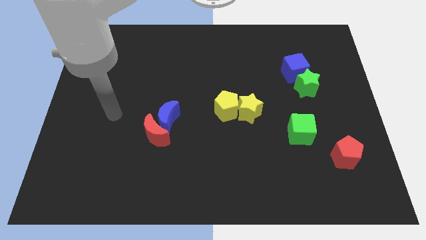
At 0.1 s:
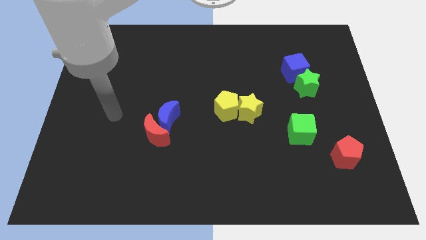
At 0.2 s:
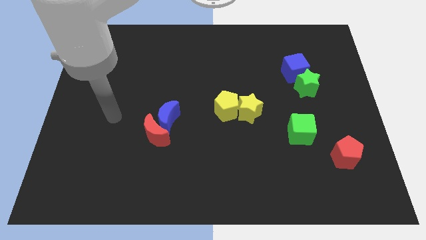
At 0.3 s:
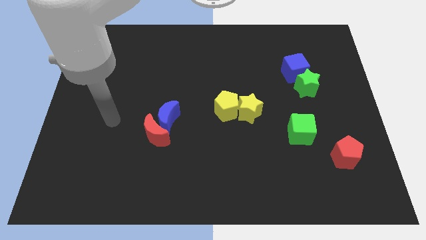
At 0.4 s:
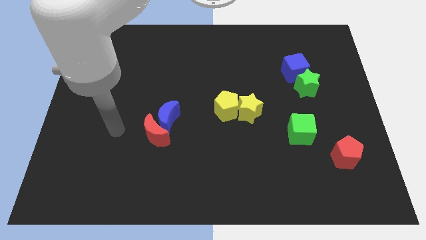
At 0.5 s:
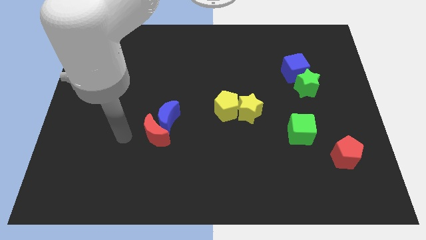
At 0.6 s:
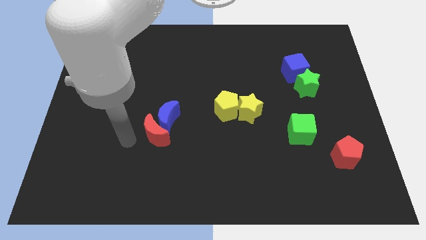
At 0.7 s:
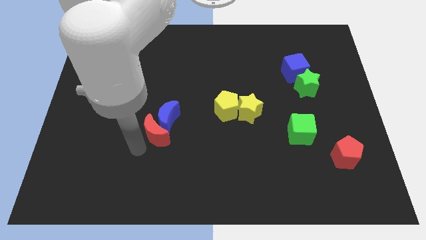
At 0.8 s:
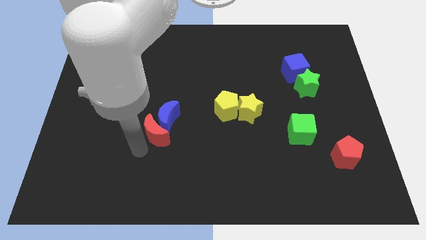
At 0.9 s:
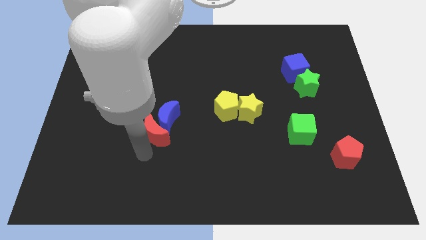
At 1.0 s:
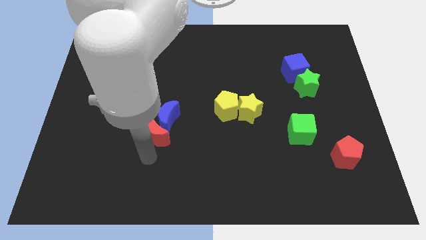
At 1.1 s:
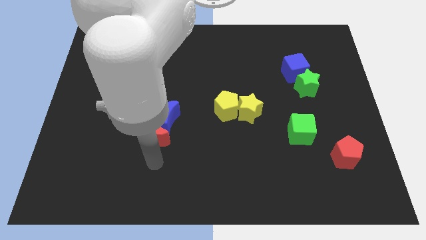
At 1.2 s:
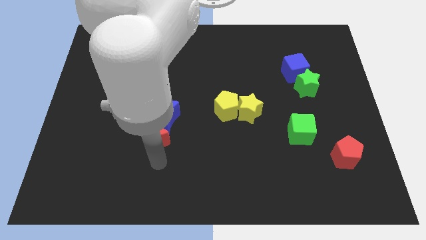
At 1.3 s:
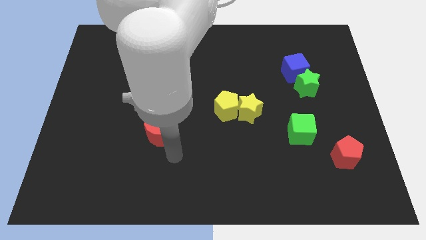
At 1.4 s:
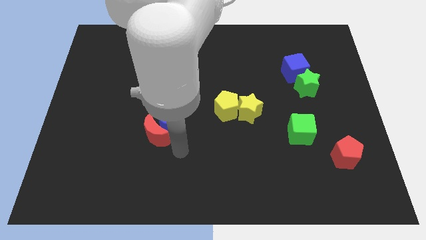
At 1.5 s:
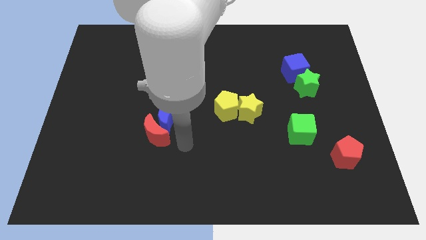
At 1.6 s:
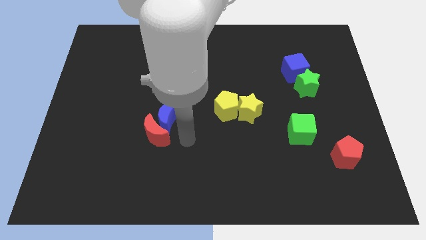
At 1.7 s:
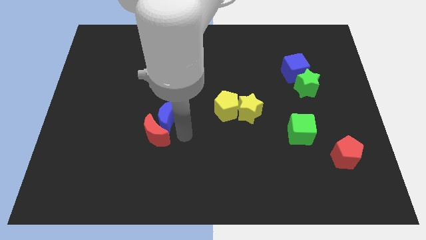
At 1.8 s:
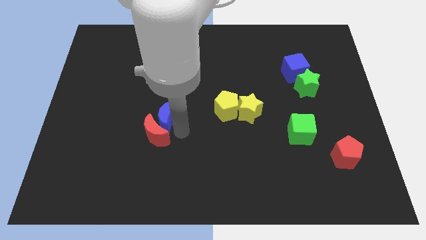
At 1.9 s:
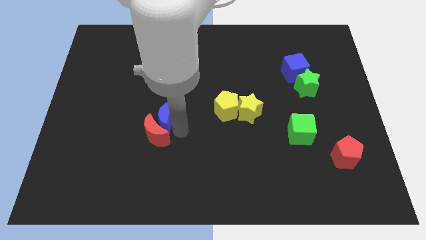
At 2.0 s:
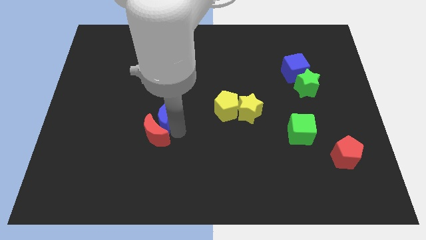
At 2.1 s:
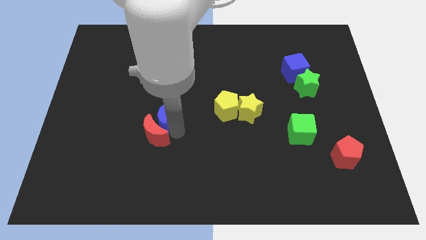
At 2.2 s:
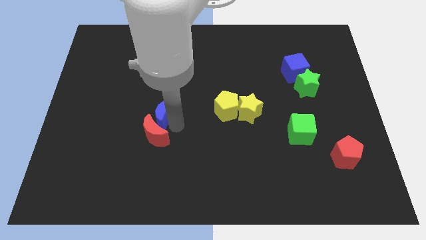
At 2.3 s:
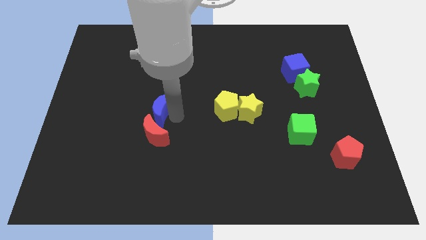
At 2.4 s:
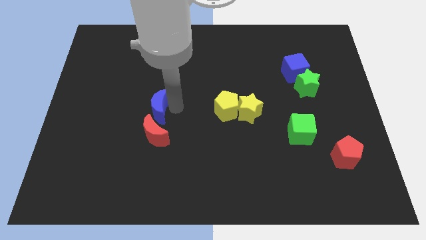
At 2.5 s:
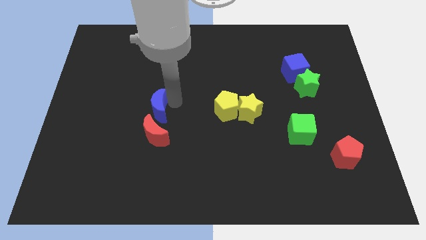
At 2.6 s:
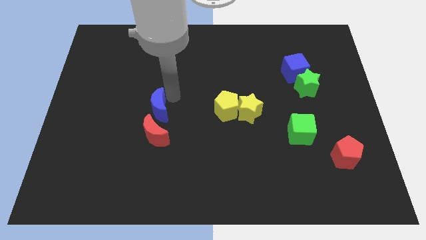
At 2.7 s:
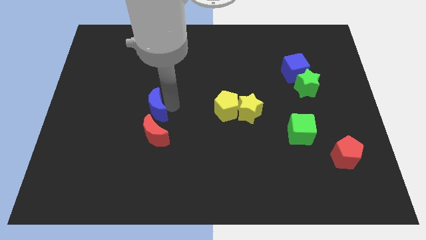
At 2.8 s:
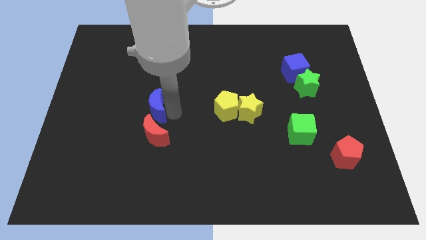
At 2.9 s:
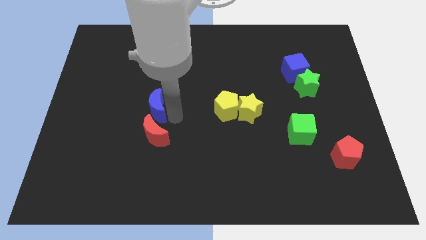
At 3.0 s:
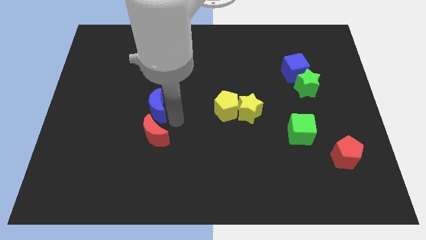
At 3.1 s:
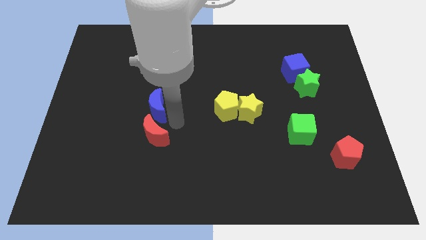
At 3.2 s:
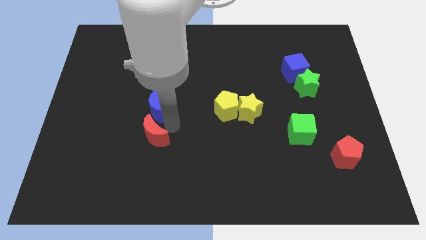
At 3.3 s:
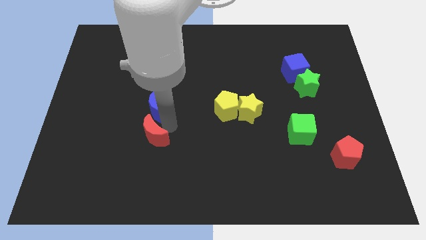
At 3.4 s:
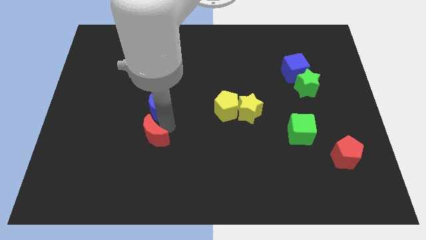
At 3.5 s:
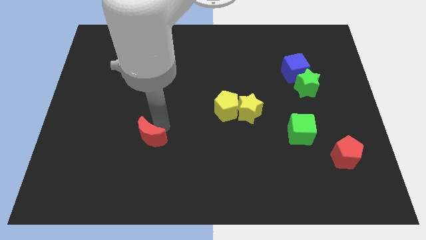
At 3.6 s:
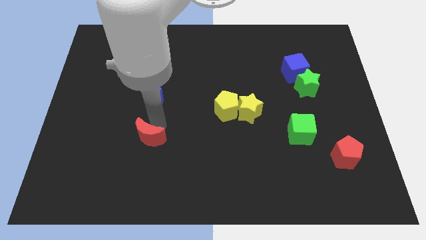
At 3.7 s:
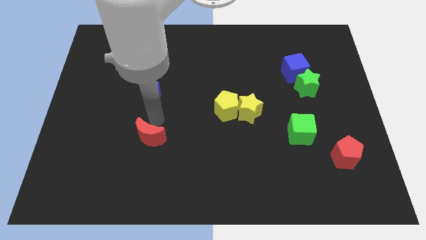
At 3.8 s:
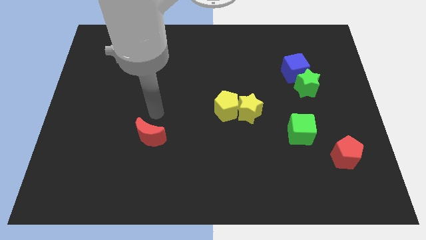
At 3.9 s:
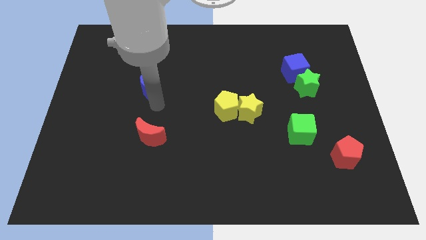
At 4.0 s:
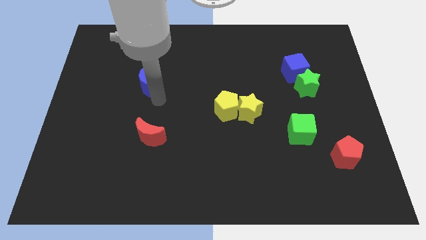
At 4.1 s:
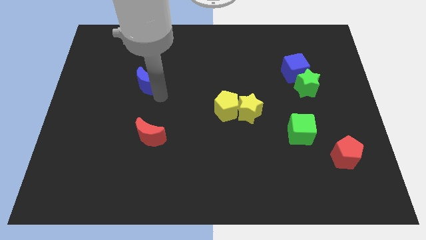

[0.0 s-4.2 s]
separate the blue crescent from the red crescent

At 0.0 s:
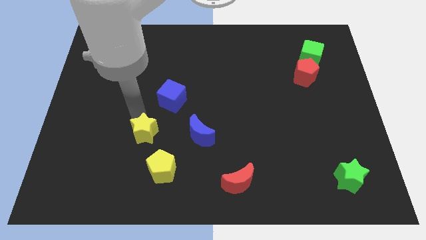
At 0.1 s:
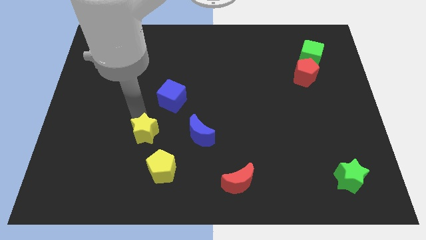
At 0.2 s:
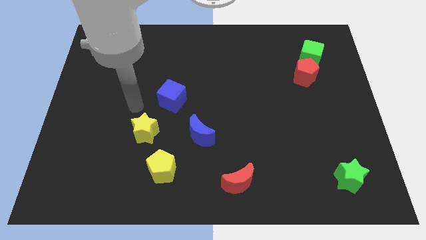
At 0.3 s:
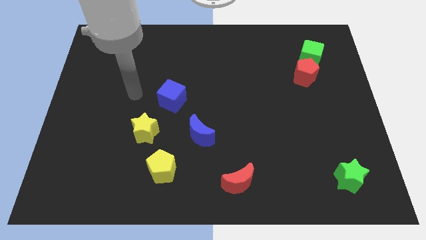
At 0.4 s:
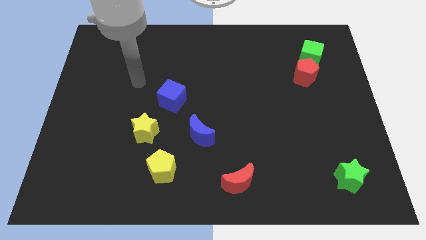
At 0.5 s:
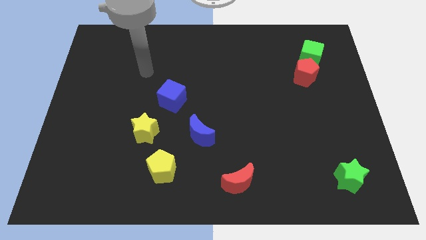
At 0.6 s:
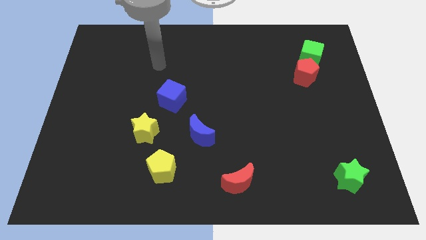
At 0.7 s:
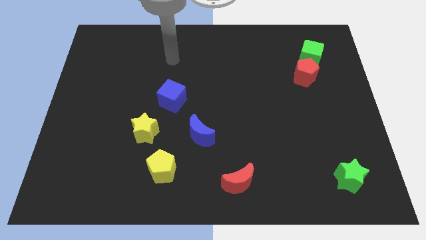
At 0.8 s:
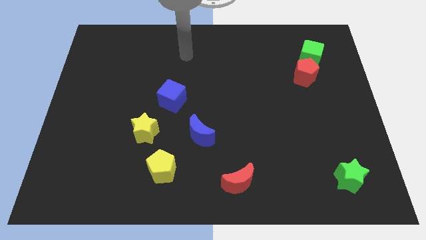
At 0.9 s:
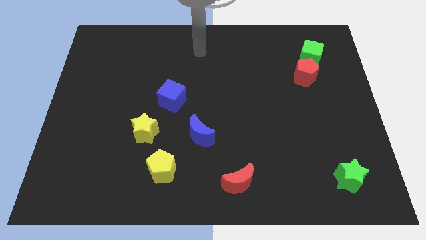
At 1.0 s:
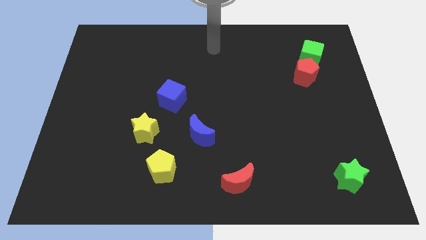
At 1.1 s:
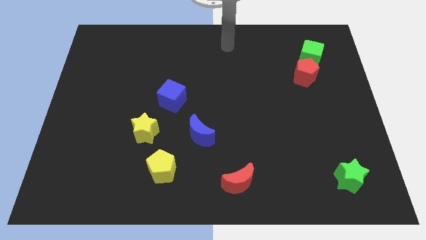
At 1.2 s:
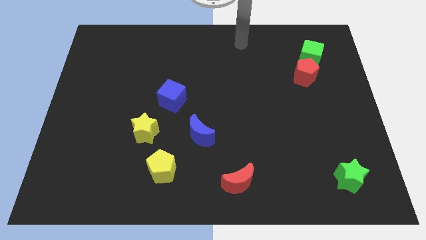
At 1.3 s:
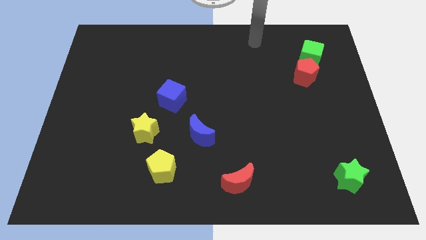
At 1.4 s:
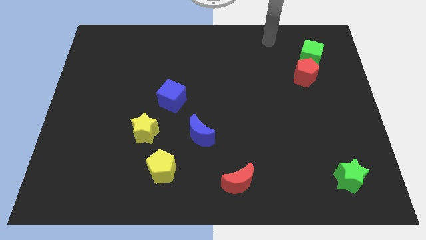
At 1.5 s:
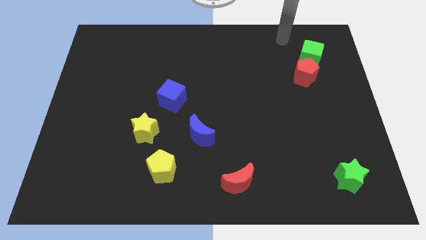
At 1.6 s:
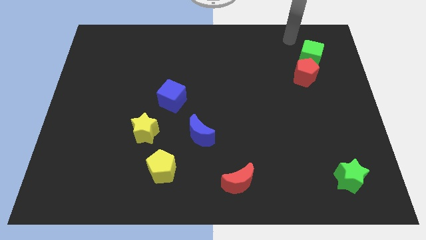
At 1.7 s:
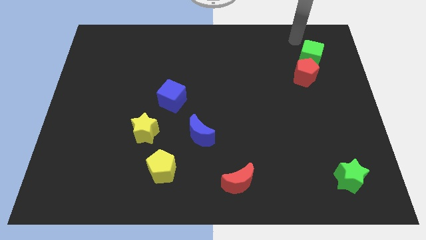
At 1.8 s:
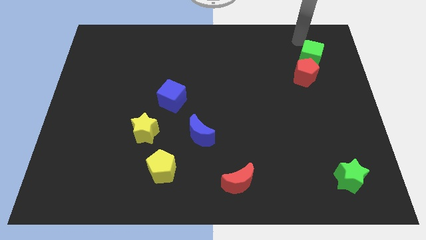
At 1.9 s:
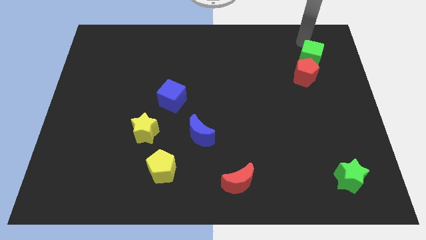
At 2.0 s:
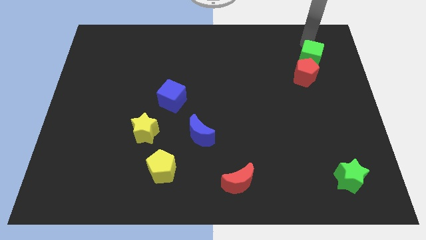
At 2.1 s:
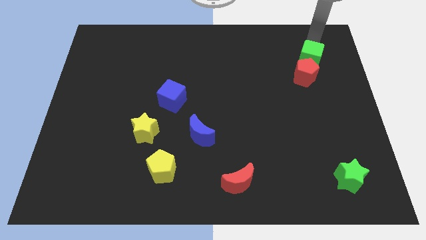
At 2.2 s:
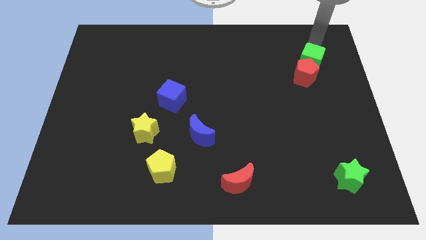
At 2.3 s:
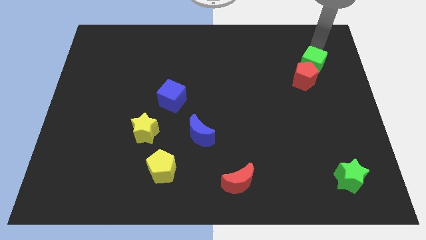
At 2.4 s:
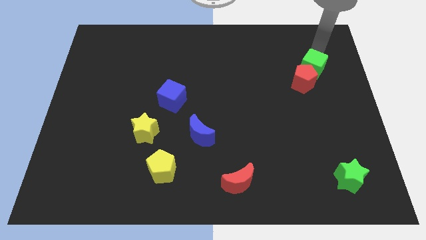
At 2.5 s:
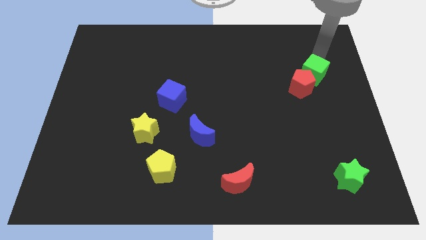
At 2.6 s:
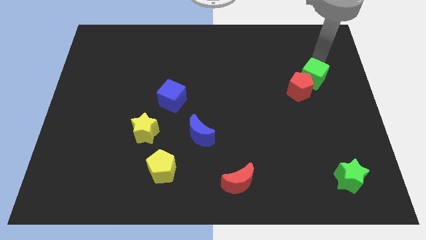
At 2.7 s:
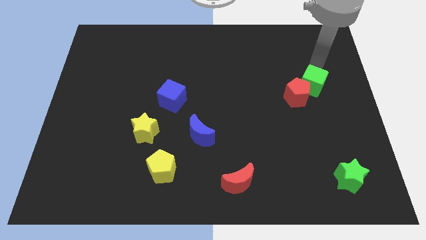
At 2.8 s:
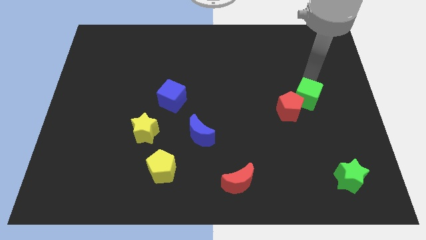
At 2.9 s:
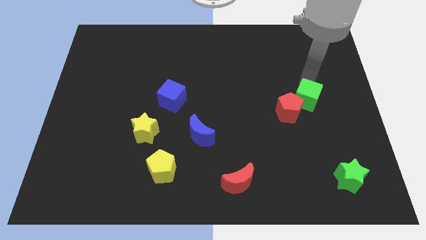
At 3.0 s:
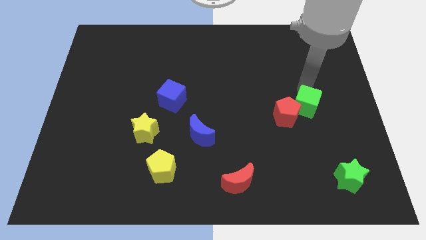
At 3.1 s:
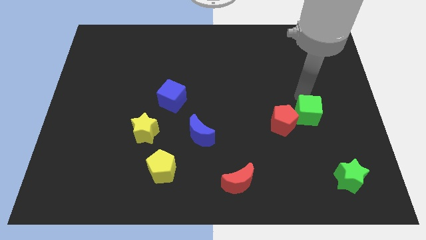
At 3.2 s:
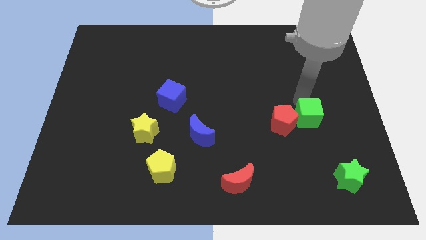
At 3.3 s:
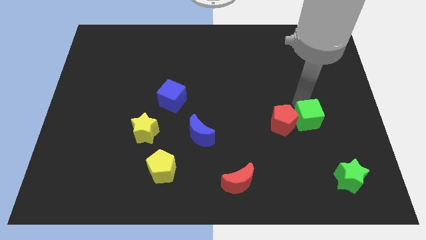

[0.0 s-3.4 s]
push green cube in to red pentagon

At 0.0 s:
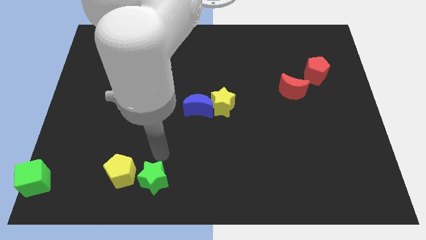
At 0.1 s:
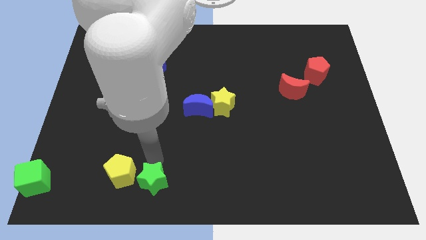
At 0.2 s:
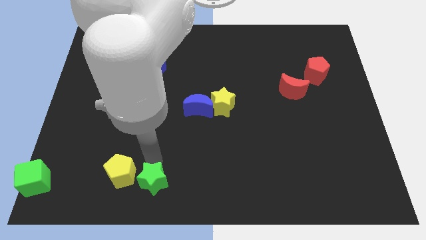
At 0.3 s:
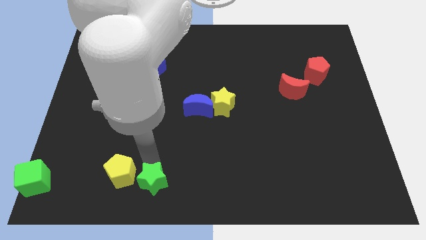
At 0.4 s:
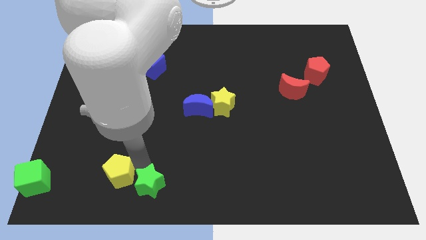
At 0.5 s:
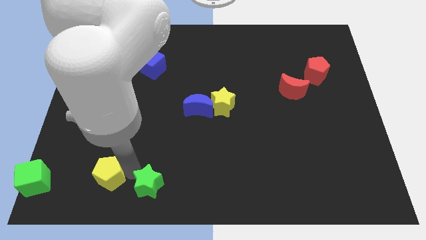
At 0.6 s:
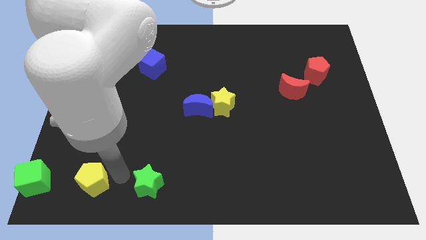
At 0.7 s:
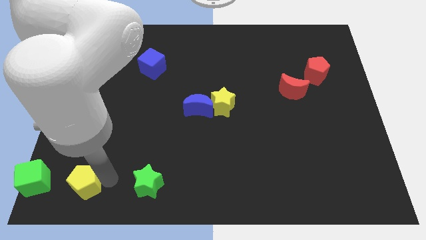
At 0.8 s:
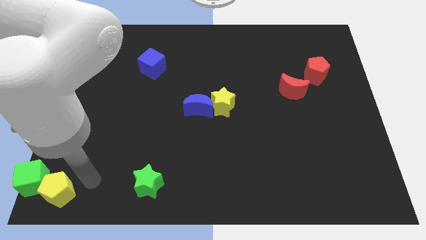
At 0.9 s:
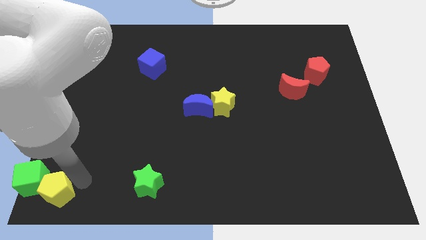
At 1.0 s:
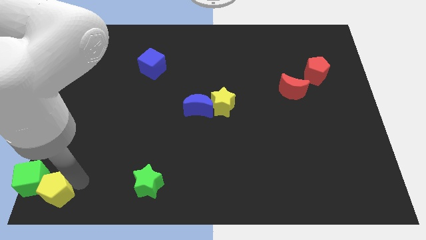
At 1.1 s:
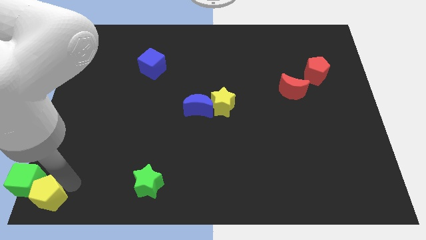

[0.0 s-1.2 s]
place yellow pentagon to the right side of the green cube

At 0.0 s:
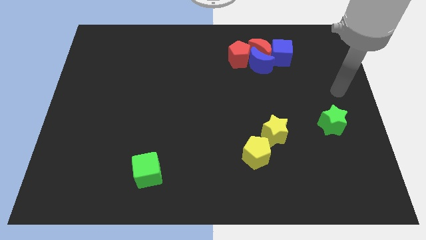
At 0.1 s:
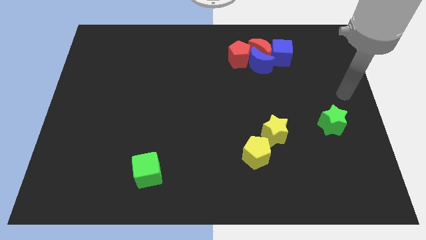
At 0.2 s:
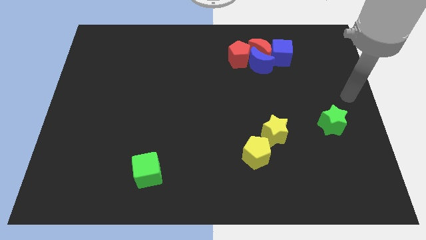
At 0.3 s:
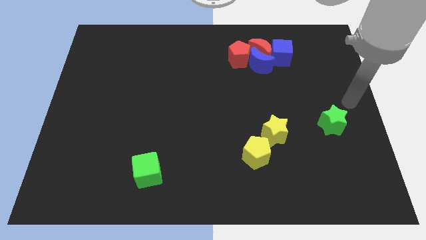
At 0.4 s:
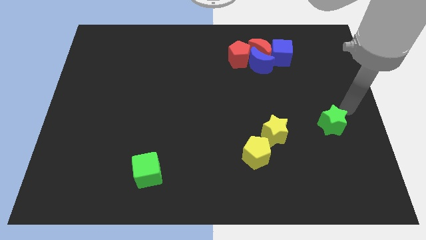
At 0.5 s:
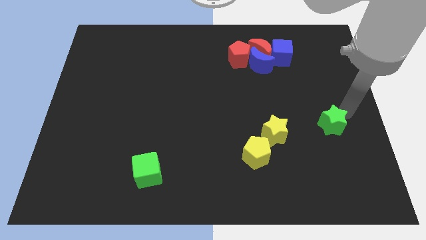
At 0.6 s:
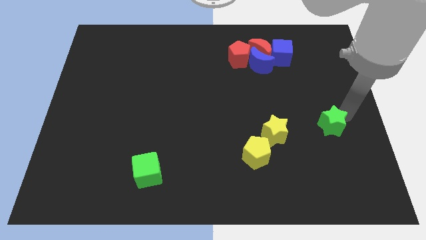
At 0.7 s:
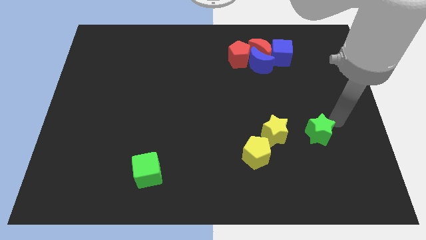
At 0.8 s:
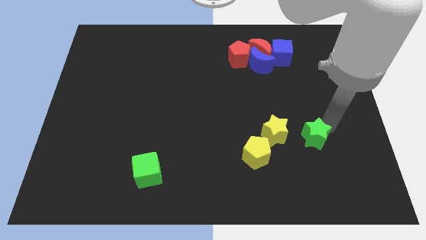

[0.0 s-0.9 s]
move the green star to the right of the yellow star
